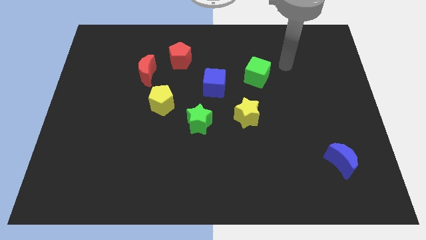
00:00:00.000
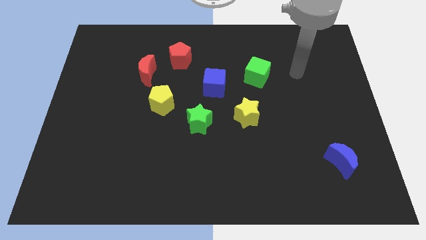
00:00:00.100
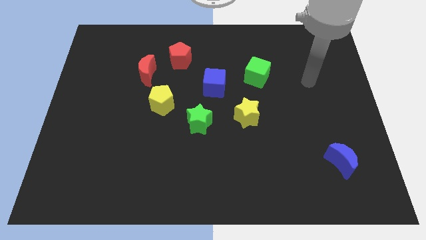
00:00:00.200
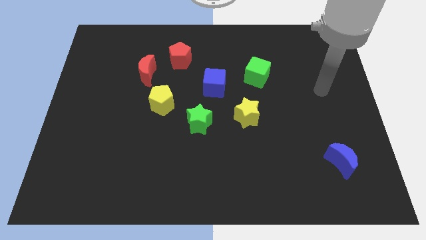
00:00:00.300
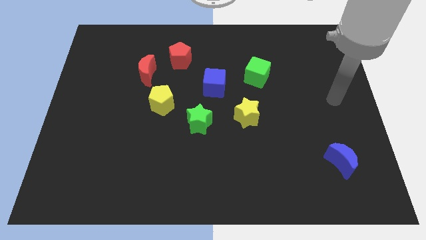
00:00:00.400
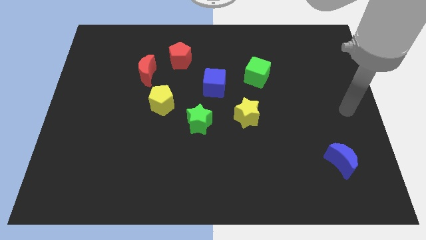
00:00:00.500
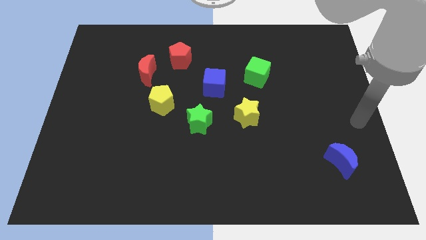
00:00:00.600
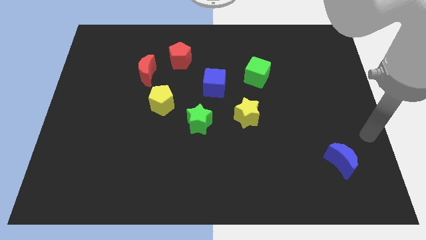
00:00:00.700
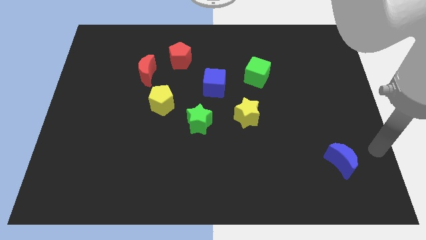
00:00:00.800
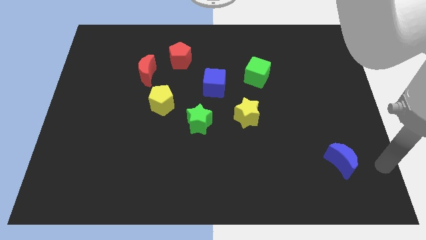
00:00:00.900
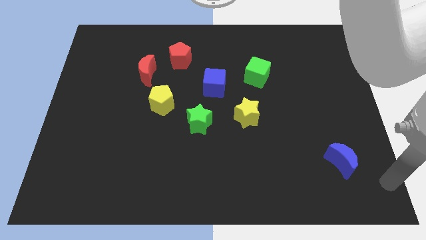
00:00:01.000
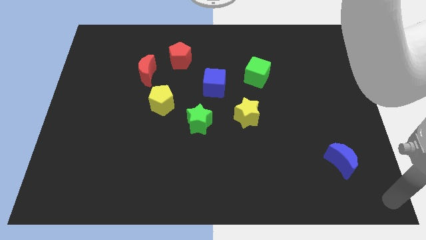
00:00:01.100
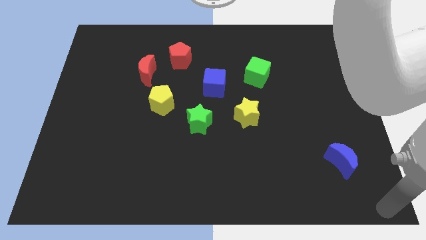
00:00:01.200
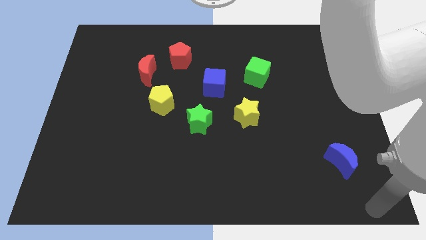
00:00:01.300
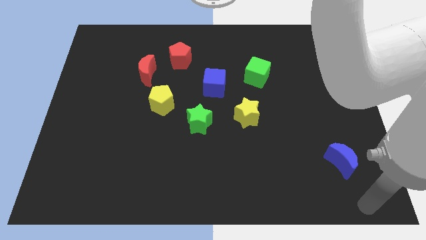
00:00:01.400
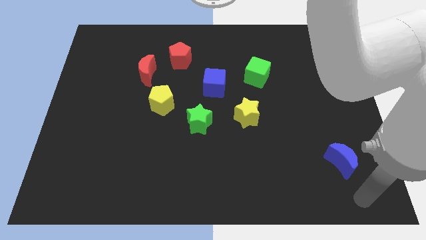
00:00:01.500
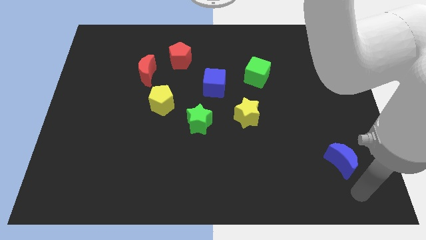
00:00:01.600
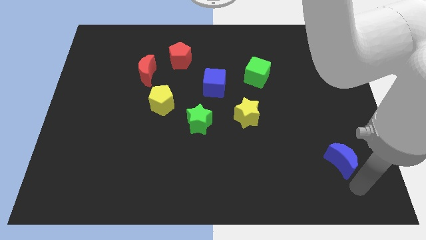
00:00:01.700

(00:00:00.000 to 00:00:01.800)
point your arm below the blue crescent

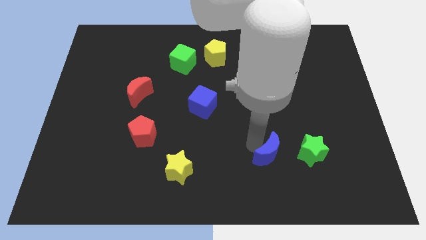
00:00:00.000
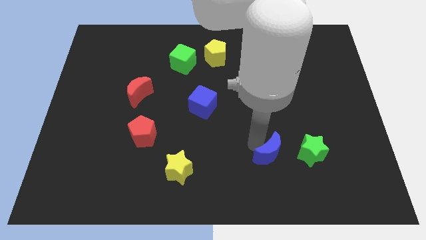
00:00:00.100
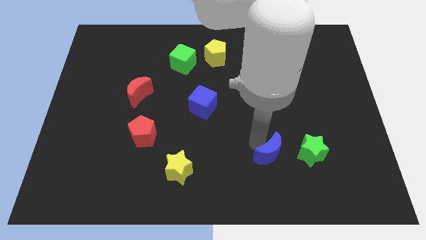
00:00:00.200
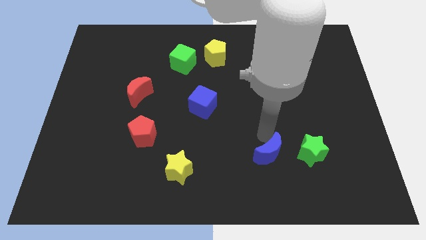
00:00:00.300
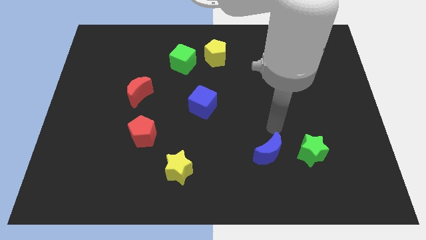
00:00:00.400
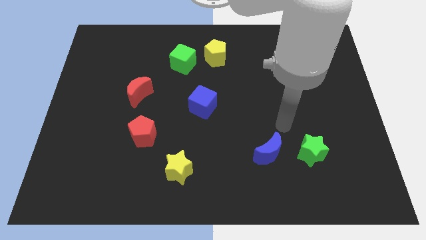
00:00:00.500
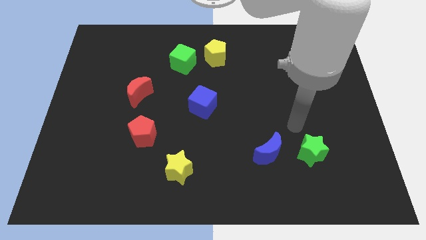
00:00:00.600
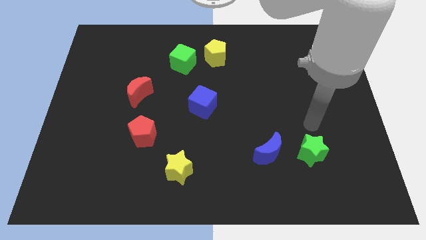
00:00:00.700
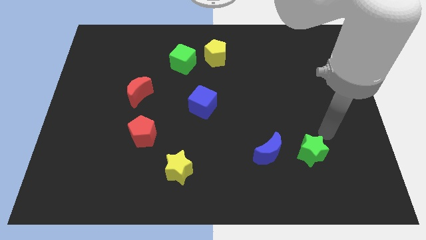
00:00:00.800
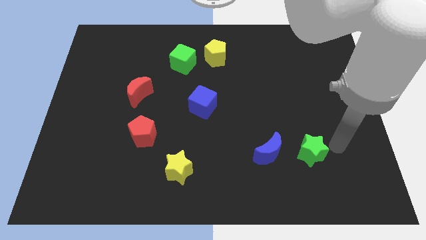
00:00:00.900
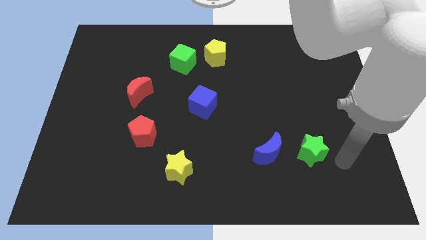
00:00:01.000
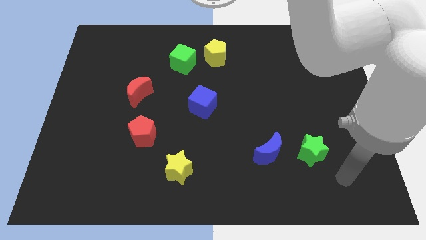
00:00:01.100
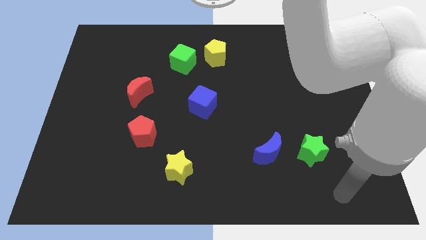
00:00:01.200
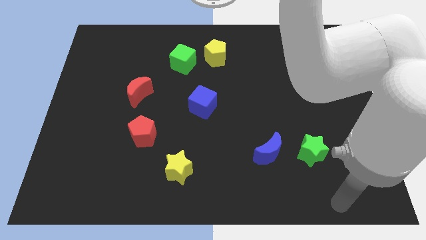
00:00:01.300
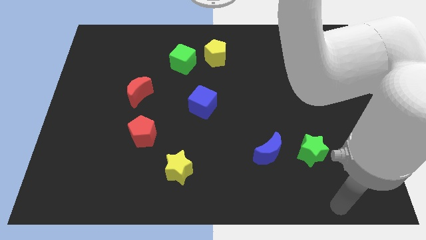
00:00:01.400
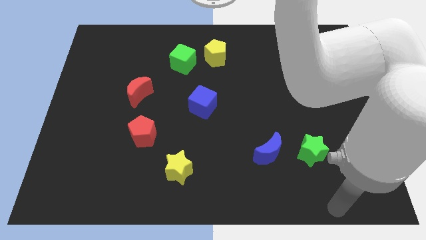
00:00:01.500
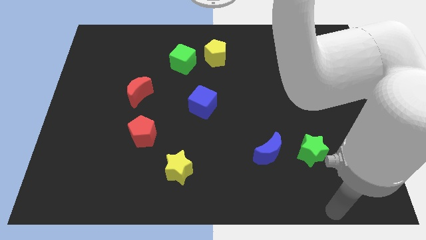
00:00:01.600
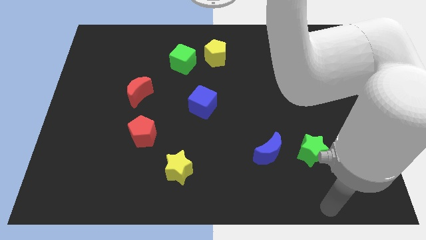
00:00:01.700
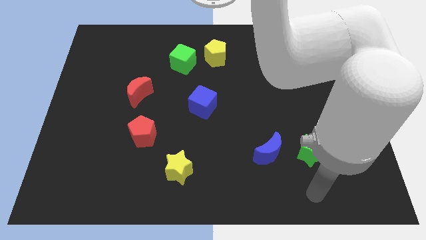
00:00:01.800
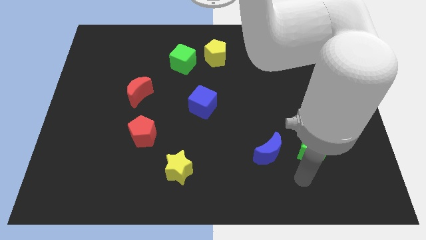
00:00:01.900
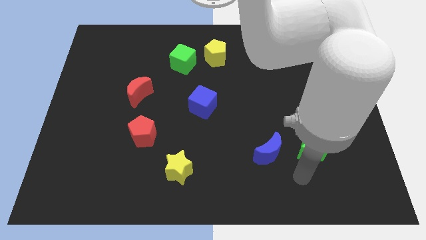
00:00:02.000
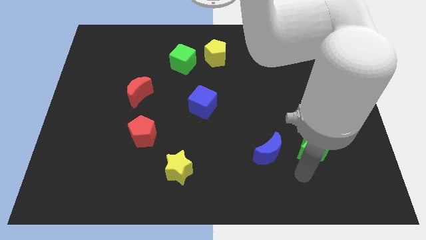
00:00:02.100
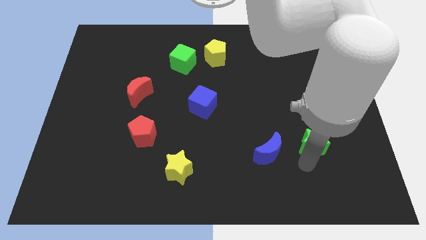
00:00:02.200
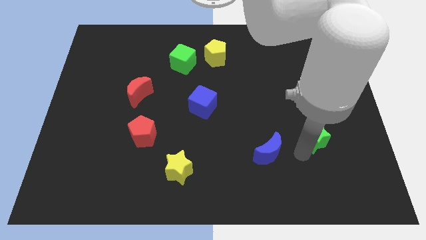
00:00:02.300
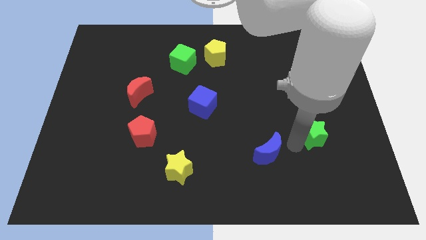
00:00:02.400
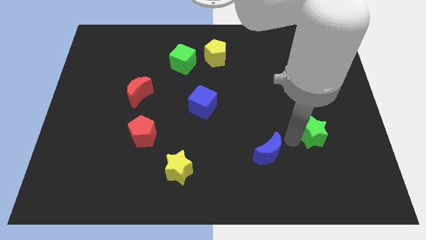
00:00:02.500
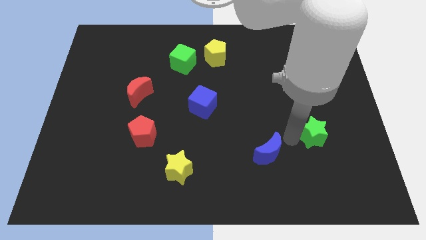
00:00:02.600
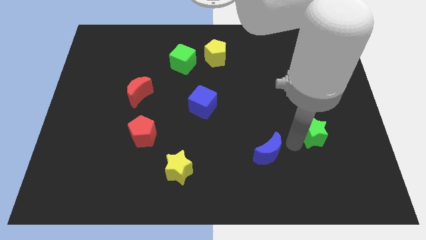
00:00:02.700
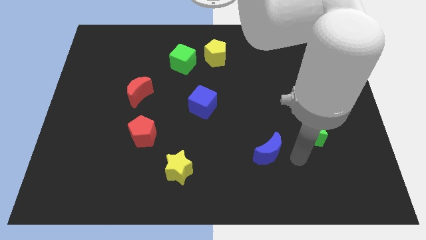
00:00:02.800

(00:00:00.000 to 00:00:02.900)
move the green star towards the top of the board

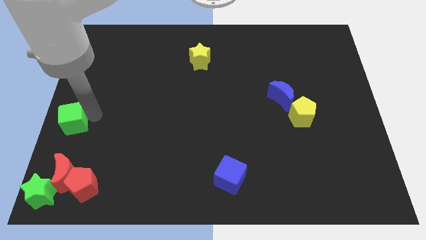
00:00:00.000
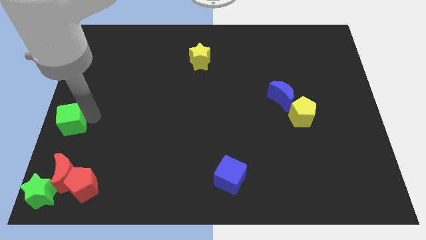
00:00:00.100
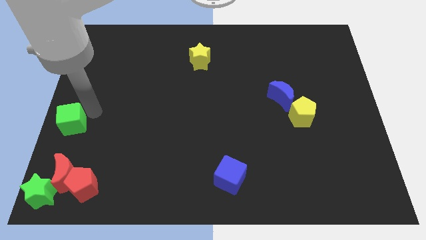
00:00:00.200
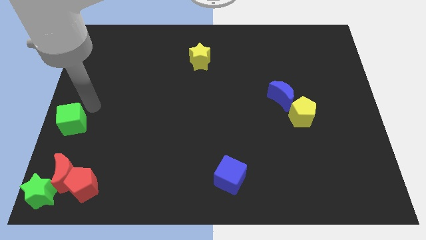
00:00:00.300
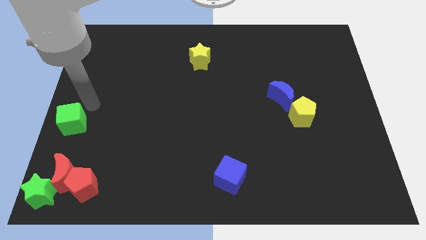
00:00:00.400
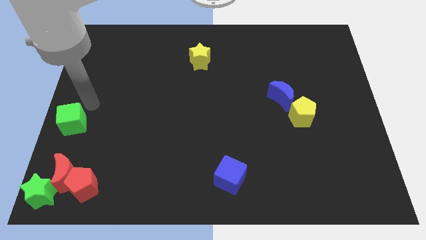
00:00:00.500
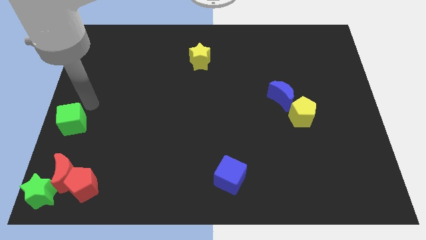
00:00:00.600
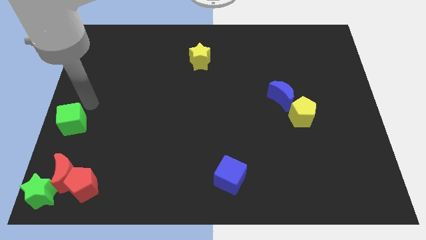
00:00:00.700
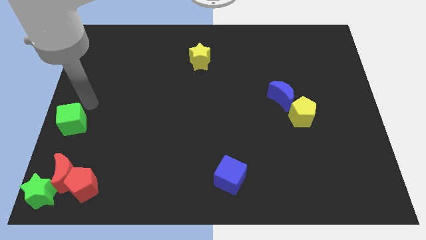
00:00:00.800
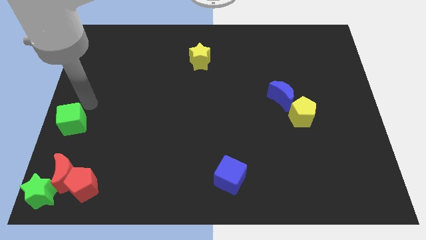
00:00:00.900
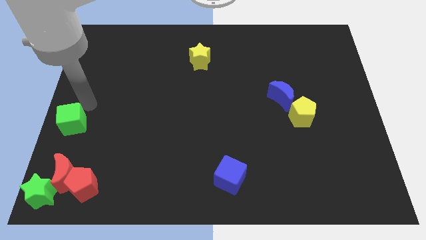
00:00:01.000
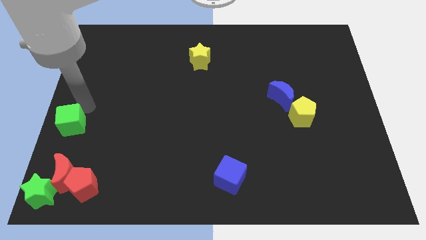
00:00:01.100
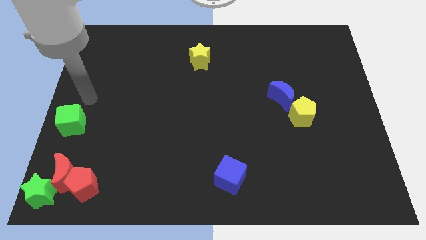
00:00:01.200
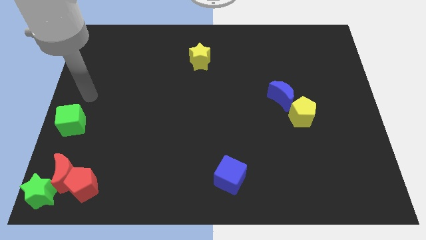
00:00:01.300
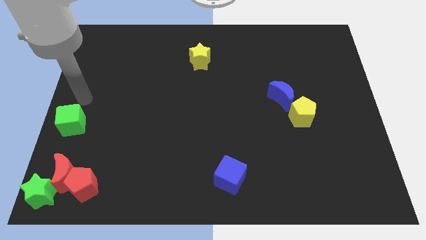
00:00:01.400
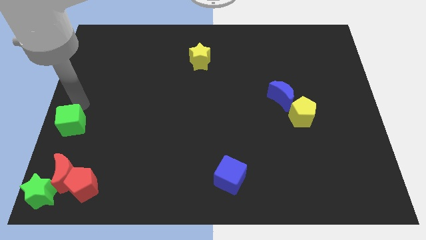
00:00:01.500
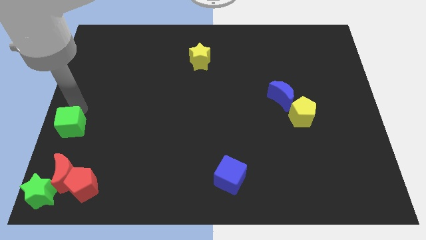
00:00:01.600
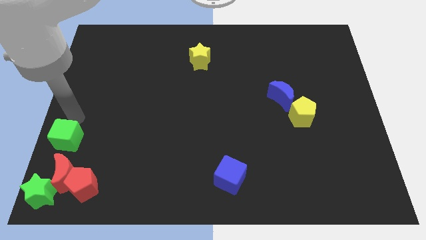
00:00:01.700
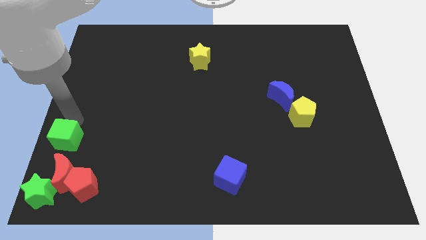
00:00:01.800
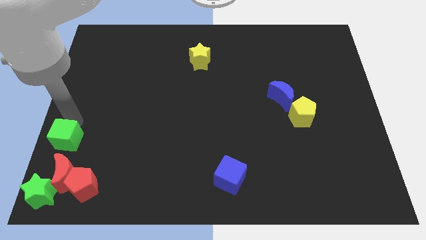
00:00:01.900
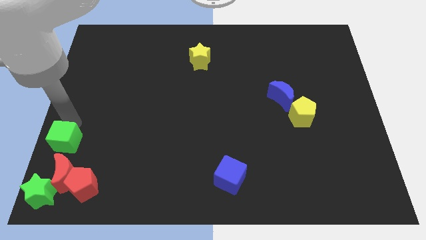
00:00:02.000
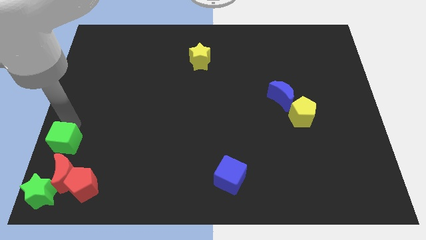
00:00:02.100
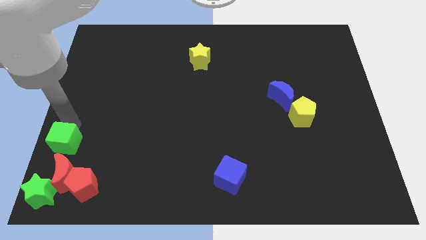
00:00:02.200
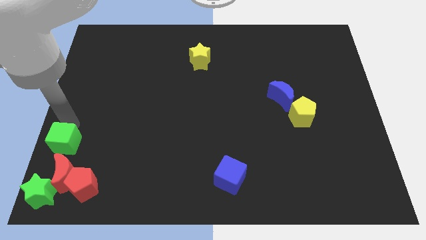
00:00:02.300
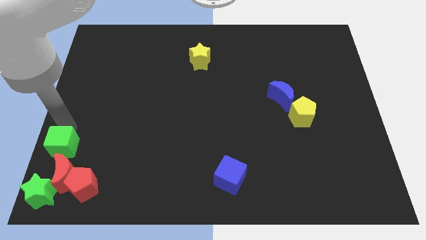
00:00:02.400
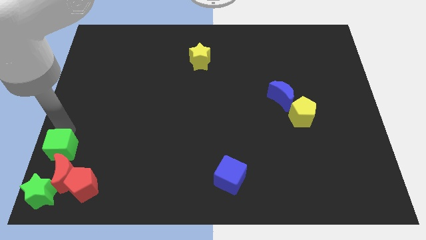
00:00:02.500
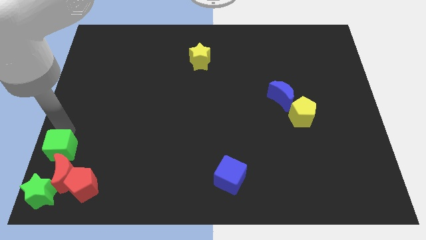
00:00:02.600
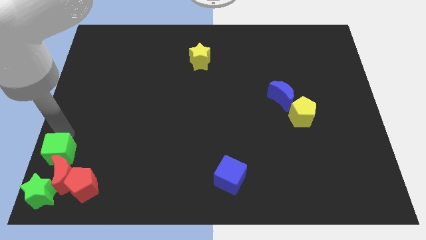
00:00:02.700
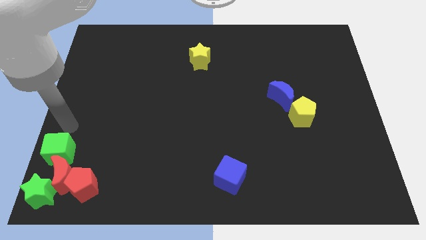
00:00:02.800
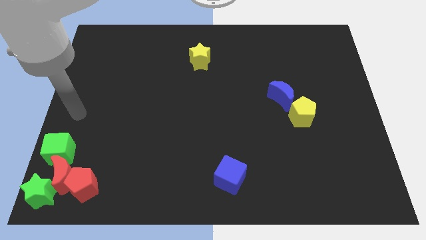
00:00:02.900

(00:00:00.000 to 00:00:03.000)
place green cube into red crescent

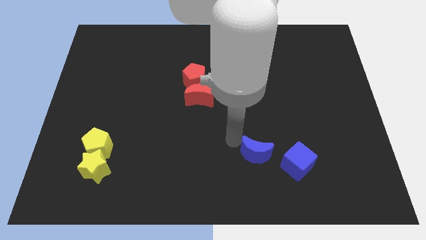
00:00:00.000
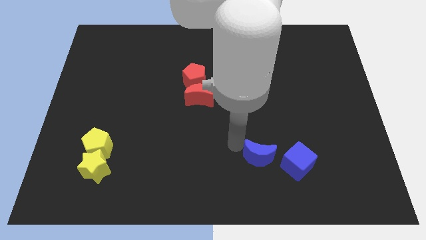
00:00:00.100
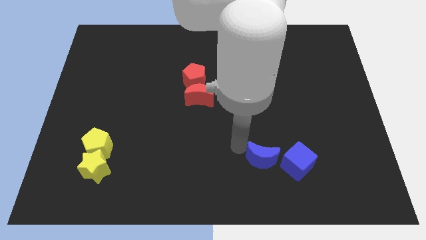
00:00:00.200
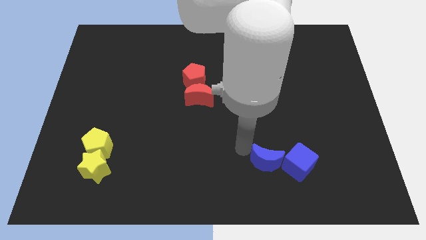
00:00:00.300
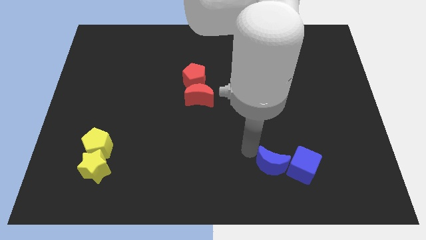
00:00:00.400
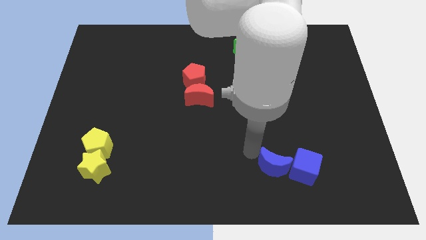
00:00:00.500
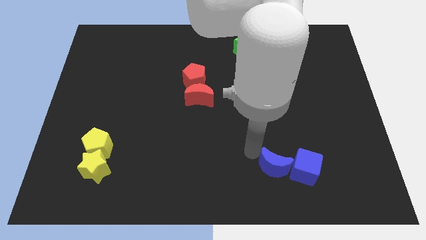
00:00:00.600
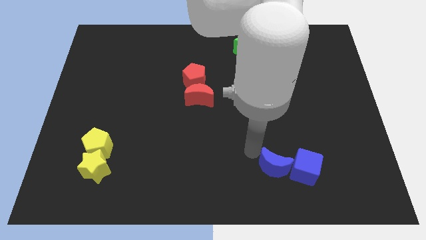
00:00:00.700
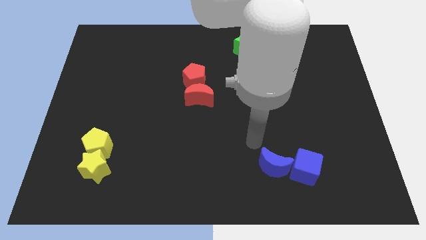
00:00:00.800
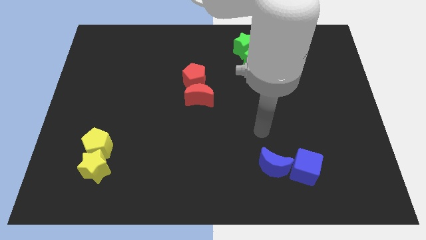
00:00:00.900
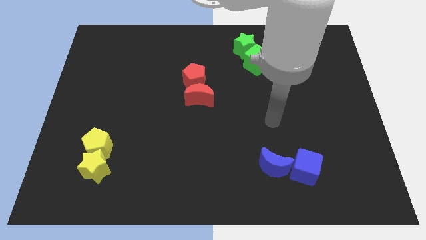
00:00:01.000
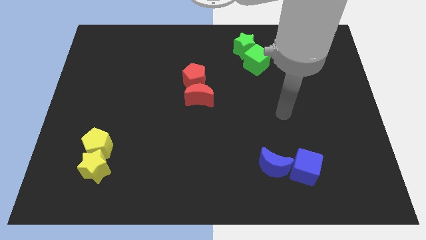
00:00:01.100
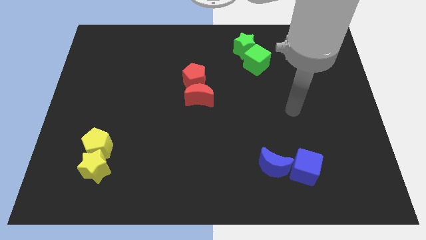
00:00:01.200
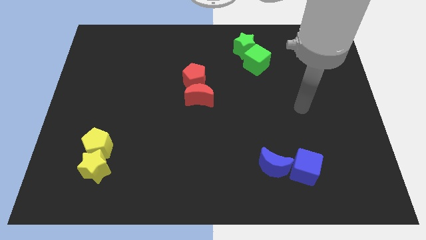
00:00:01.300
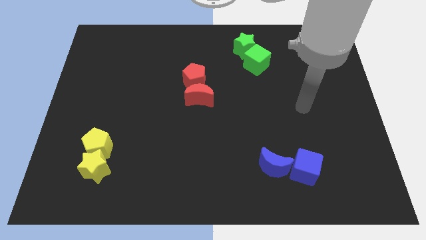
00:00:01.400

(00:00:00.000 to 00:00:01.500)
put blue blocks together
